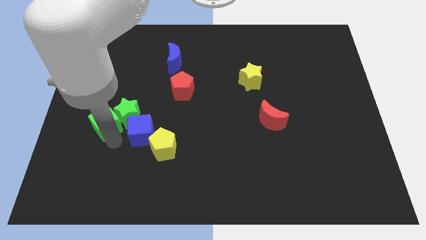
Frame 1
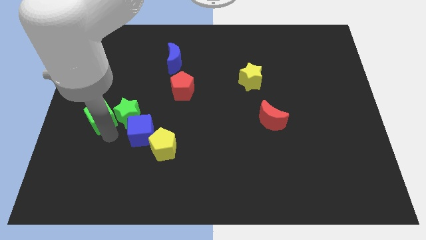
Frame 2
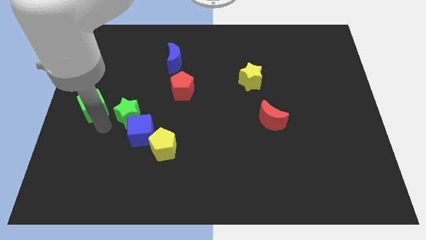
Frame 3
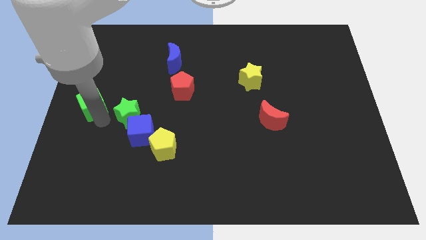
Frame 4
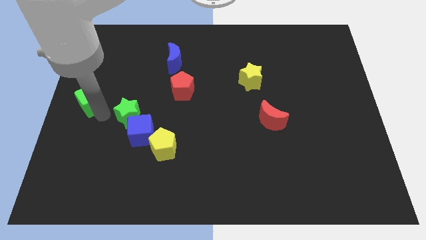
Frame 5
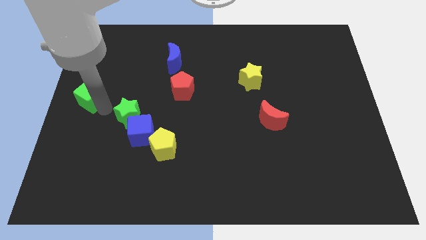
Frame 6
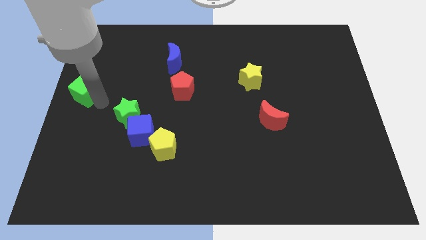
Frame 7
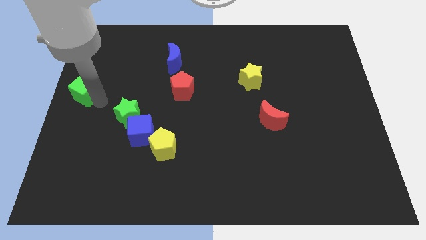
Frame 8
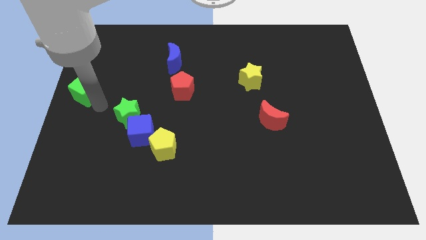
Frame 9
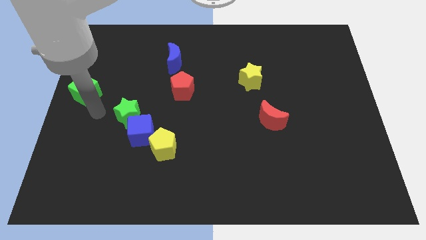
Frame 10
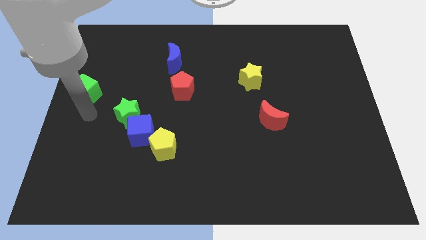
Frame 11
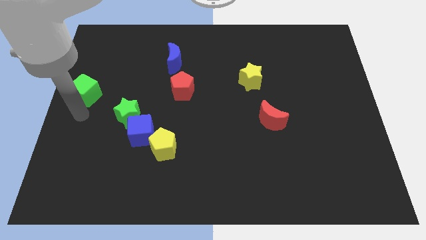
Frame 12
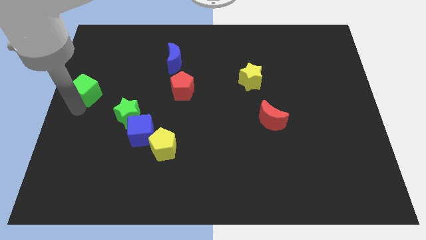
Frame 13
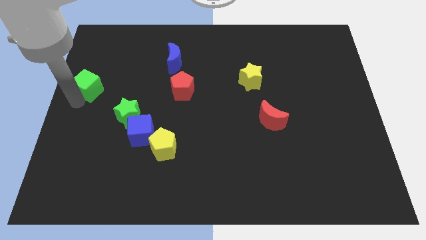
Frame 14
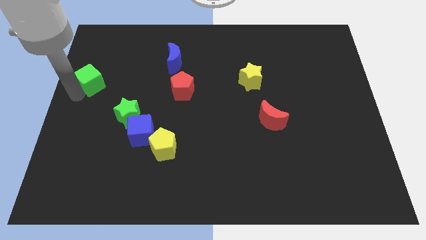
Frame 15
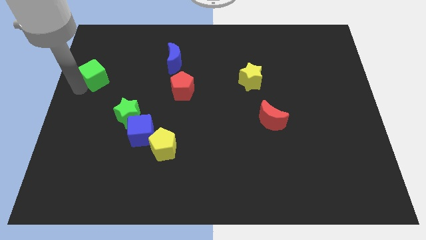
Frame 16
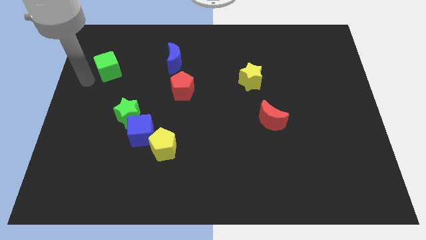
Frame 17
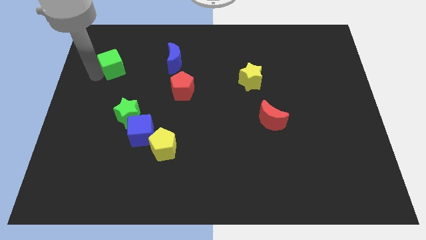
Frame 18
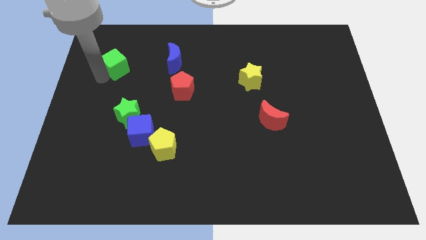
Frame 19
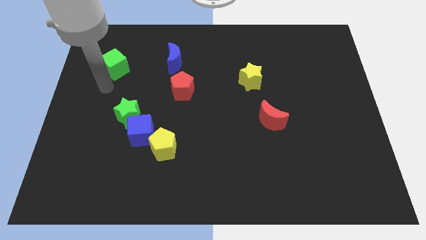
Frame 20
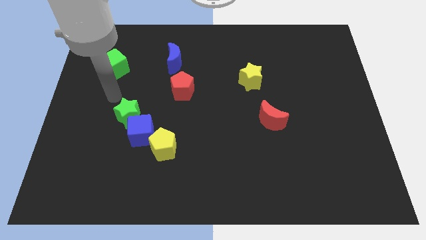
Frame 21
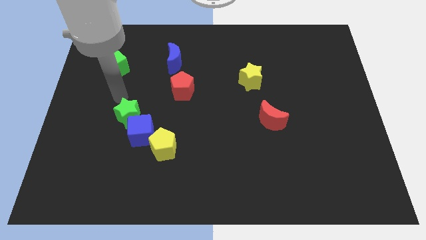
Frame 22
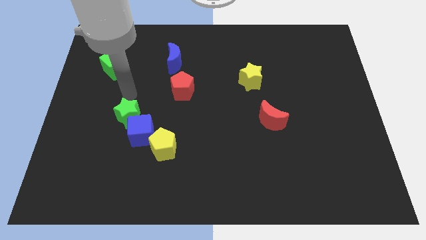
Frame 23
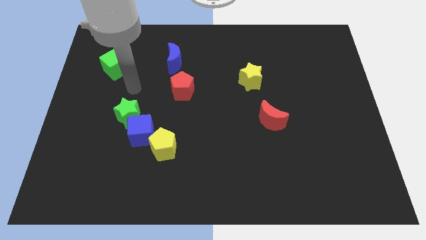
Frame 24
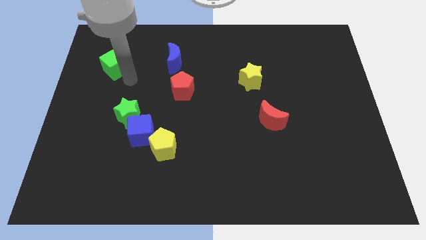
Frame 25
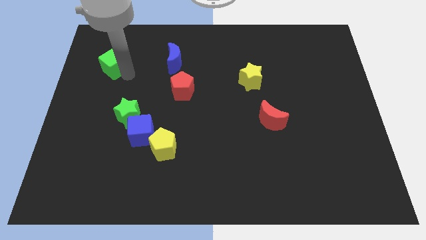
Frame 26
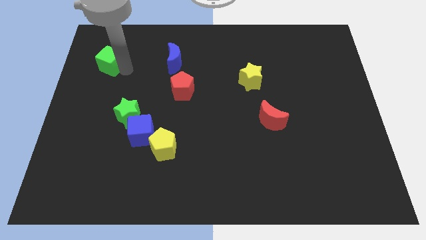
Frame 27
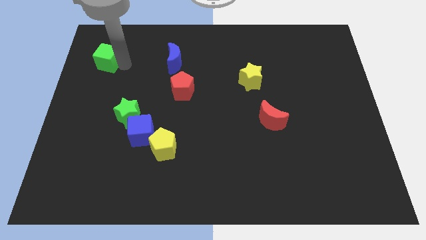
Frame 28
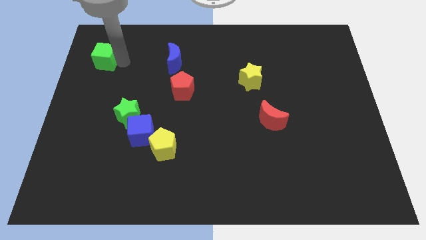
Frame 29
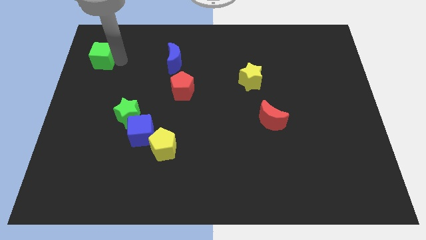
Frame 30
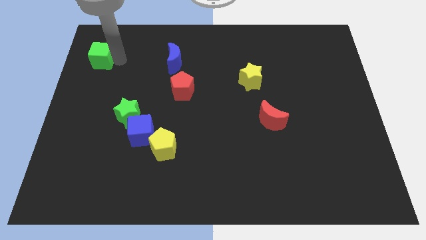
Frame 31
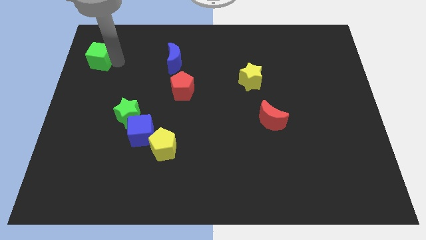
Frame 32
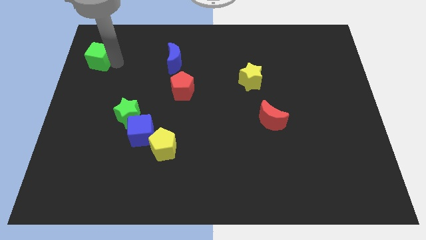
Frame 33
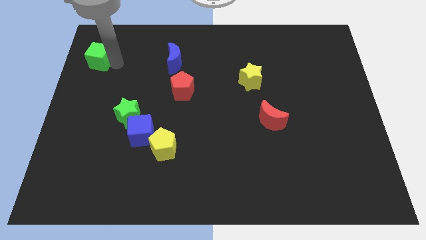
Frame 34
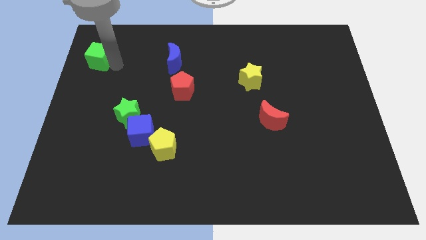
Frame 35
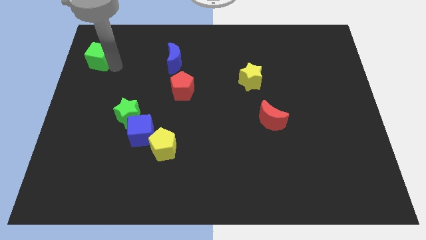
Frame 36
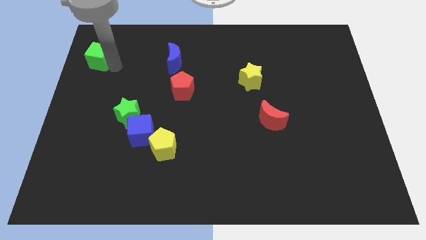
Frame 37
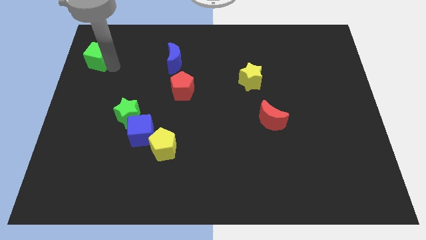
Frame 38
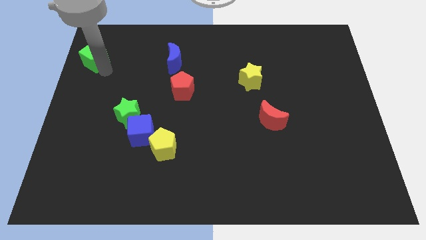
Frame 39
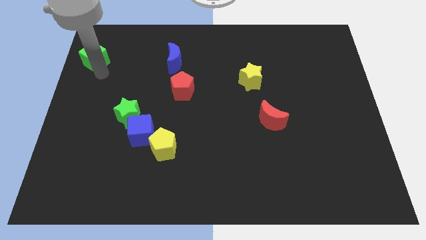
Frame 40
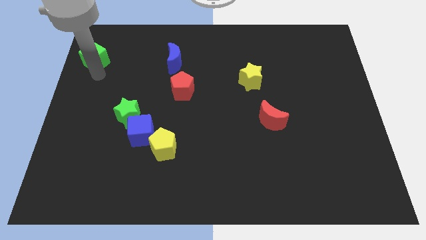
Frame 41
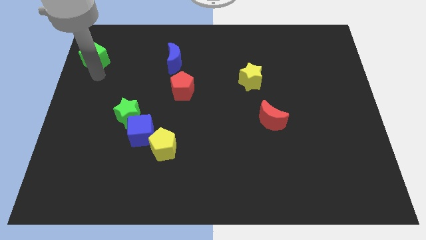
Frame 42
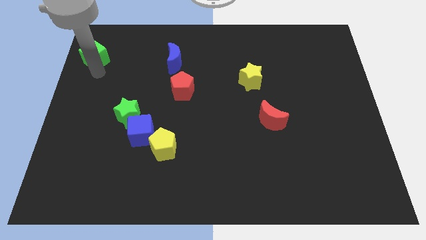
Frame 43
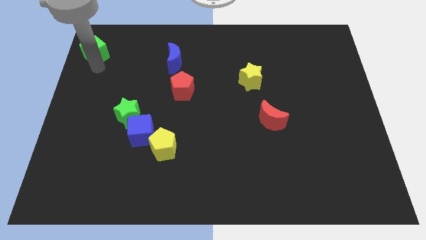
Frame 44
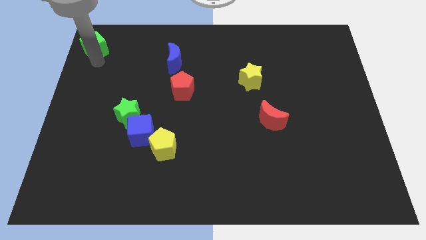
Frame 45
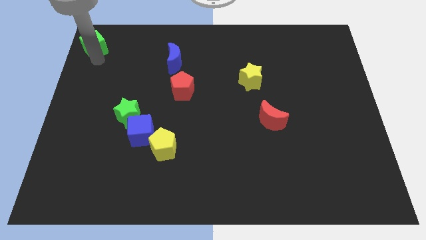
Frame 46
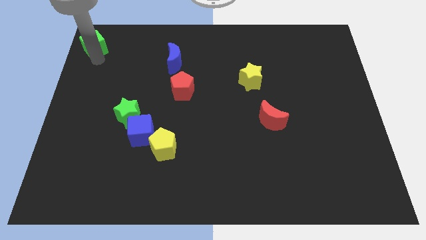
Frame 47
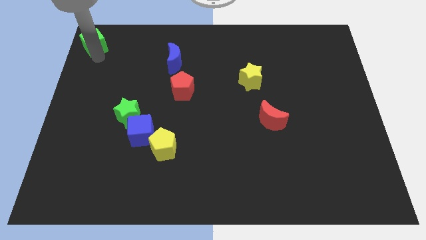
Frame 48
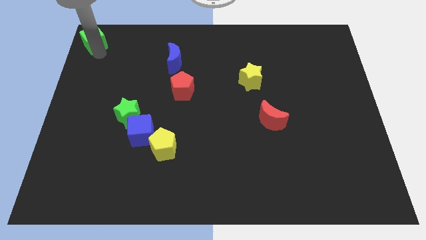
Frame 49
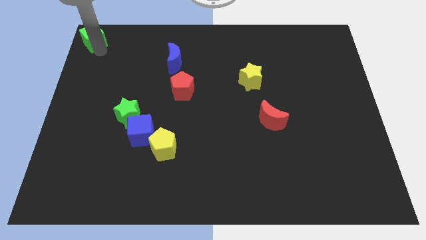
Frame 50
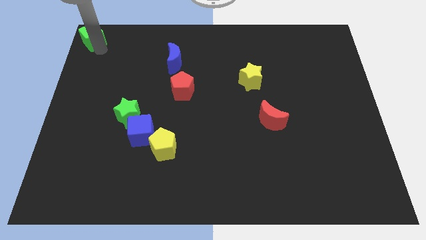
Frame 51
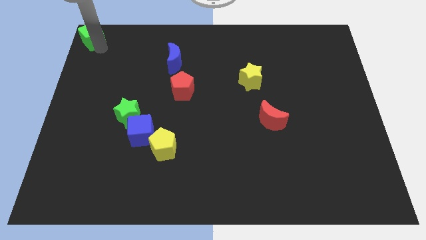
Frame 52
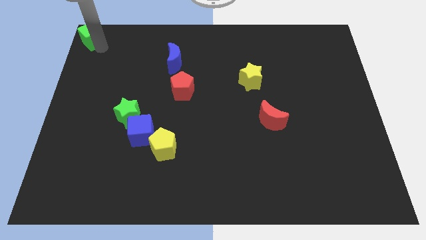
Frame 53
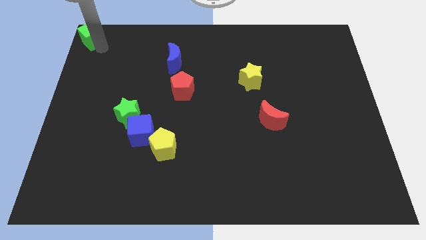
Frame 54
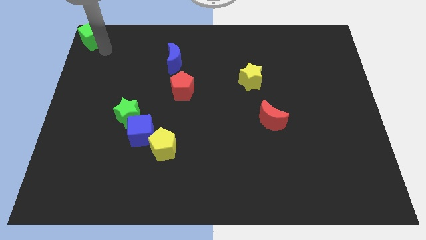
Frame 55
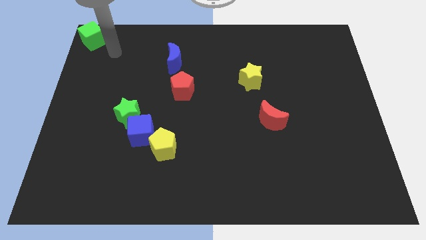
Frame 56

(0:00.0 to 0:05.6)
move the green cube to the top left corner of the board

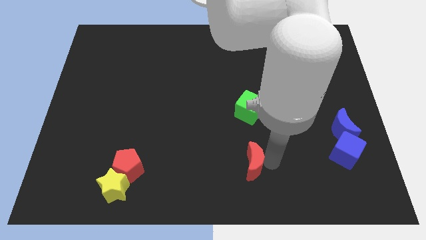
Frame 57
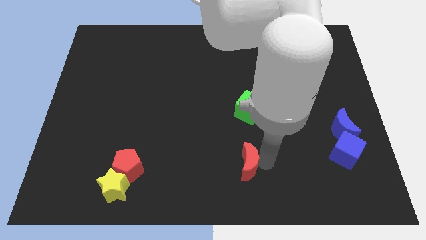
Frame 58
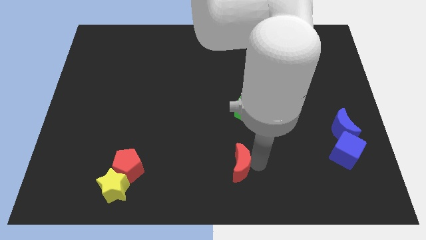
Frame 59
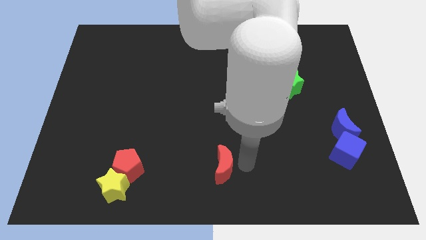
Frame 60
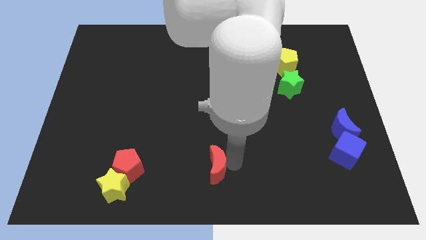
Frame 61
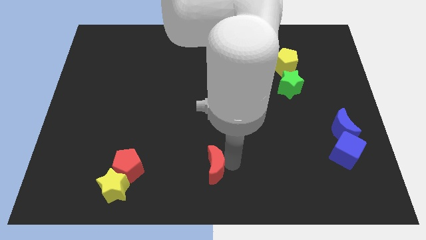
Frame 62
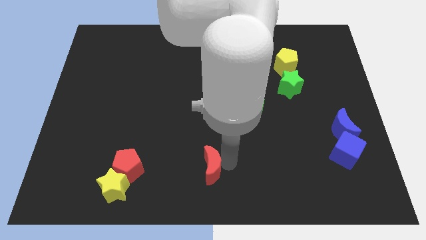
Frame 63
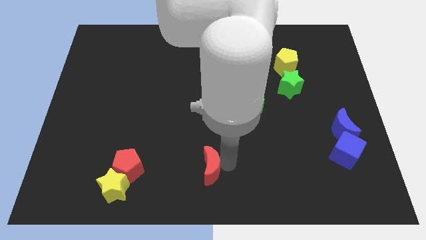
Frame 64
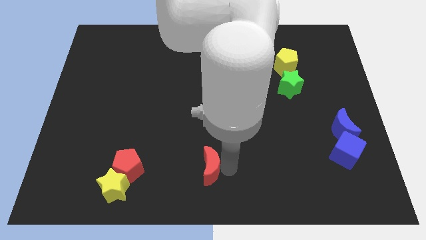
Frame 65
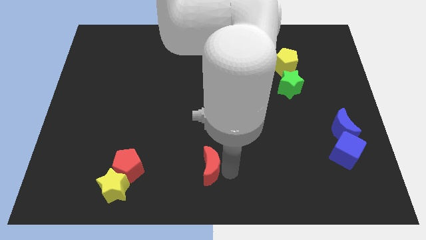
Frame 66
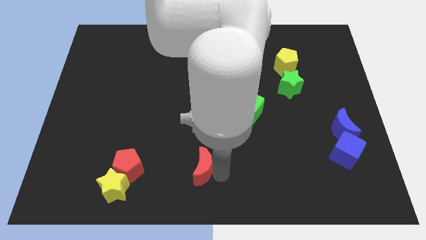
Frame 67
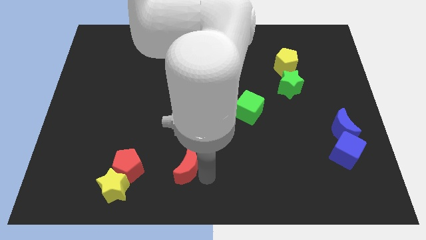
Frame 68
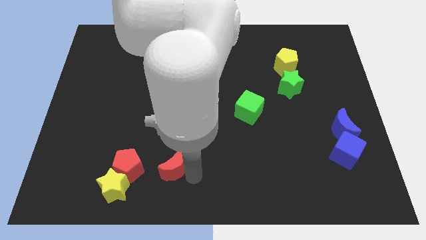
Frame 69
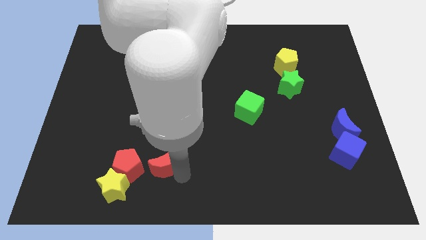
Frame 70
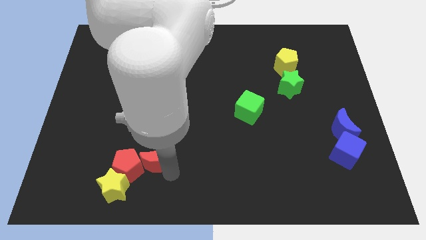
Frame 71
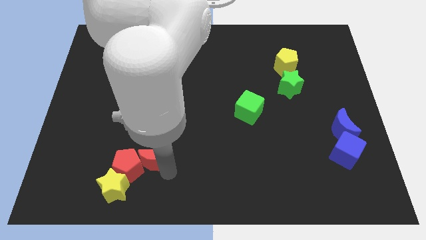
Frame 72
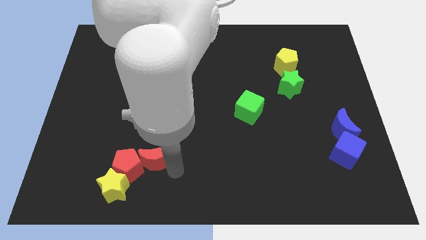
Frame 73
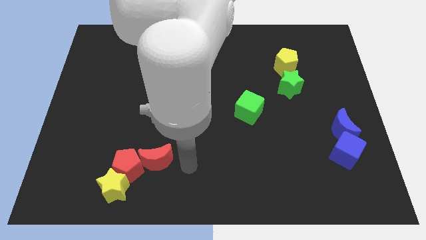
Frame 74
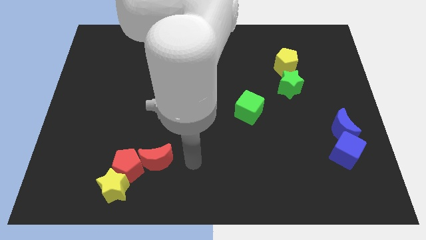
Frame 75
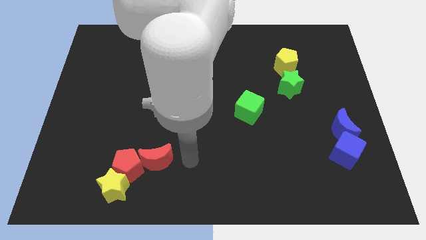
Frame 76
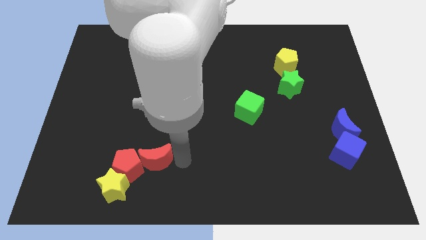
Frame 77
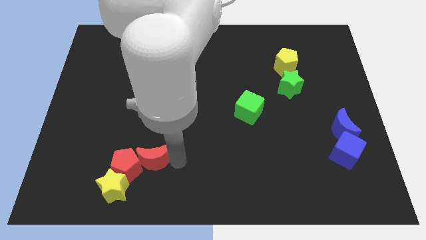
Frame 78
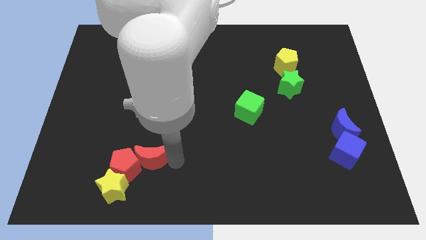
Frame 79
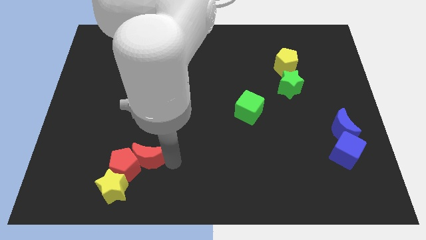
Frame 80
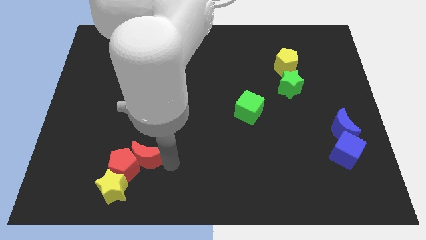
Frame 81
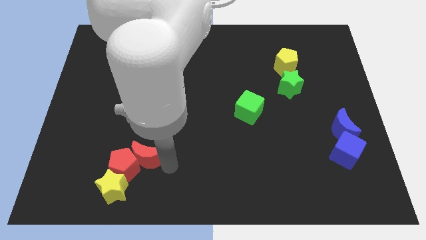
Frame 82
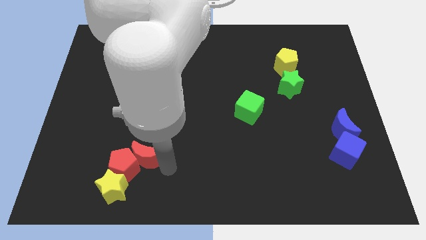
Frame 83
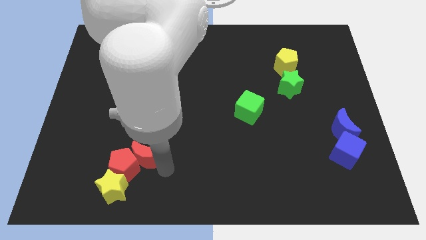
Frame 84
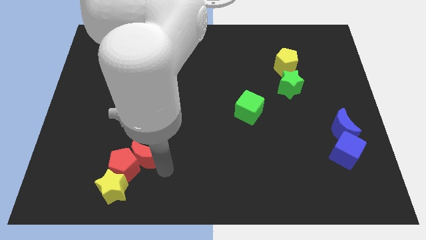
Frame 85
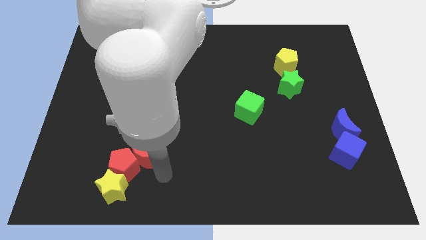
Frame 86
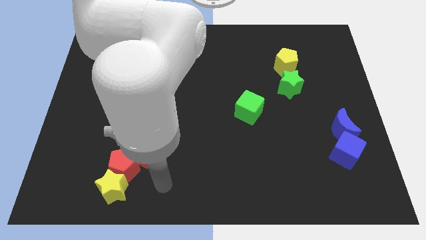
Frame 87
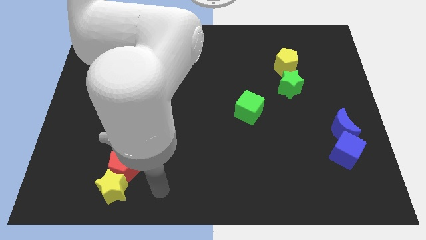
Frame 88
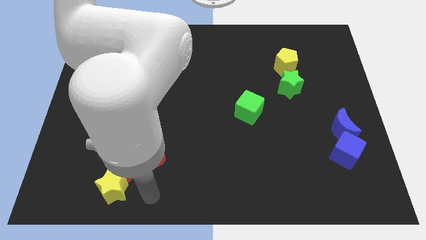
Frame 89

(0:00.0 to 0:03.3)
move the red moon into the red pentagon

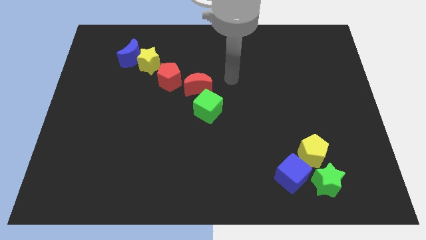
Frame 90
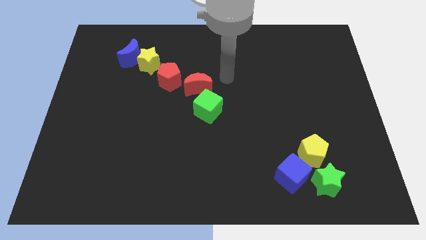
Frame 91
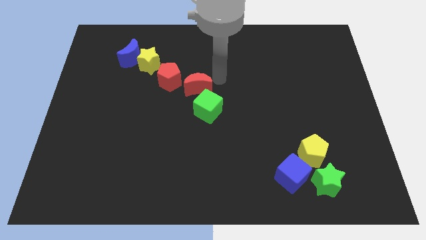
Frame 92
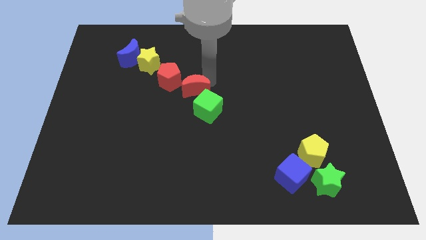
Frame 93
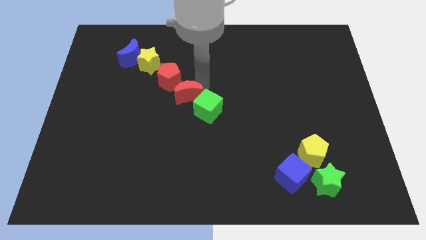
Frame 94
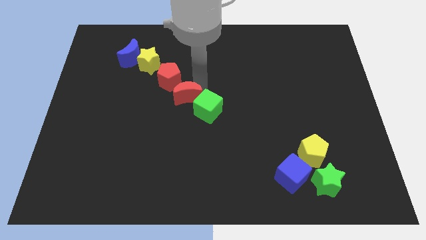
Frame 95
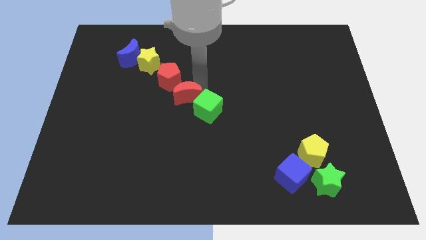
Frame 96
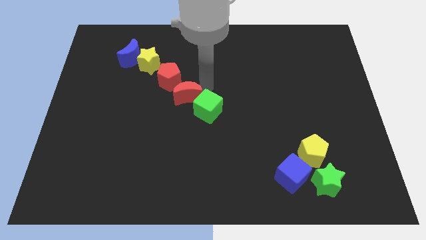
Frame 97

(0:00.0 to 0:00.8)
place the red moon between the red pentagon and green cube
